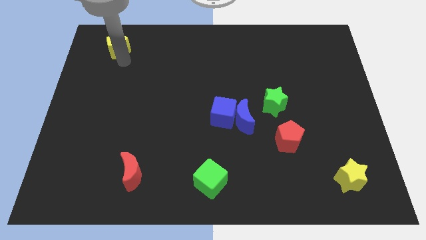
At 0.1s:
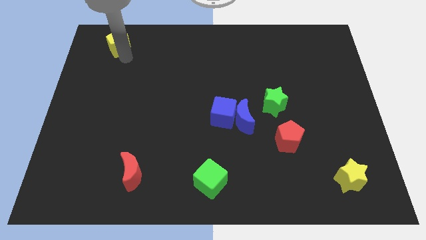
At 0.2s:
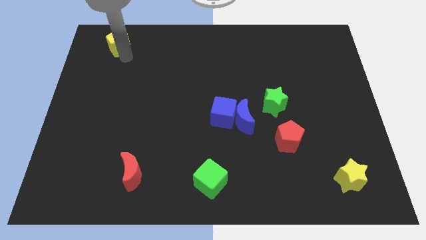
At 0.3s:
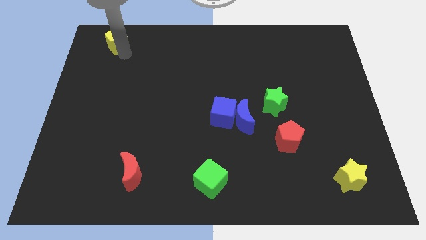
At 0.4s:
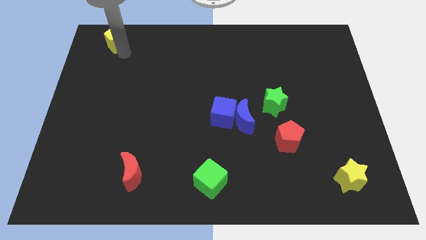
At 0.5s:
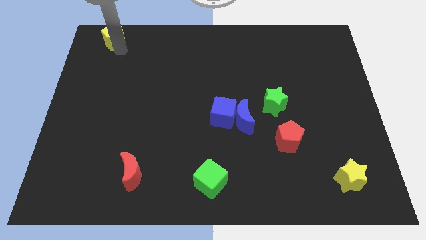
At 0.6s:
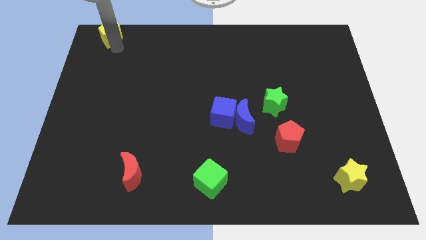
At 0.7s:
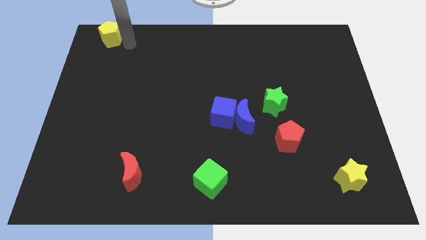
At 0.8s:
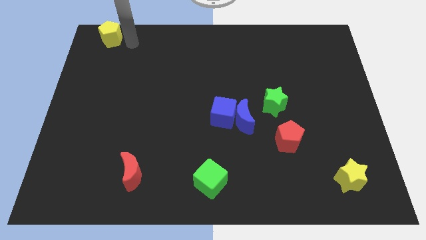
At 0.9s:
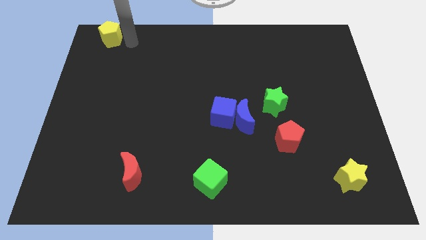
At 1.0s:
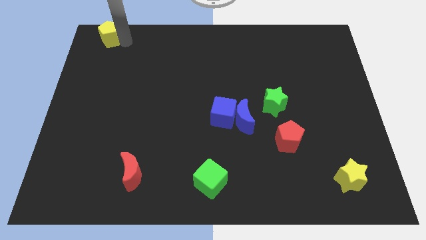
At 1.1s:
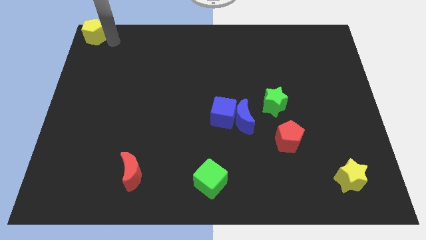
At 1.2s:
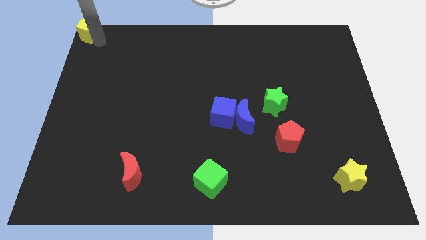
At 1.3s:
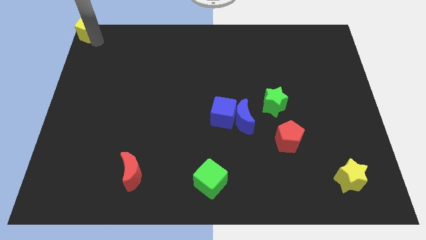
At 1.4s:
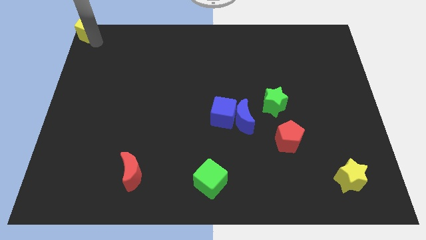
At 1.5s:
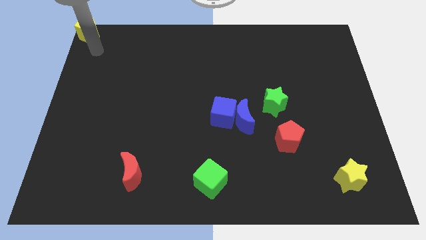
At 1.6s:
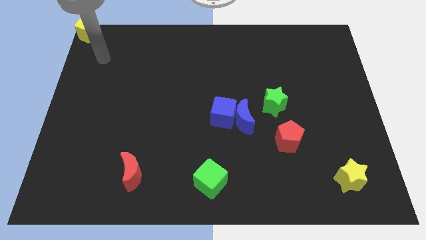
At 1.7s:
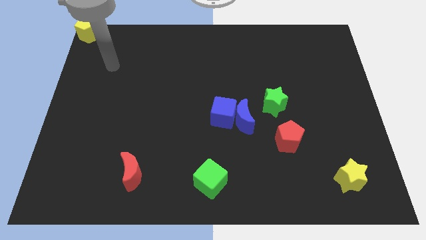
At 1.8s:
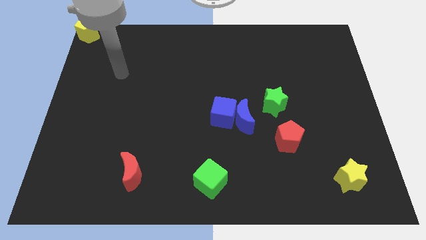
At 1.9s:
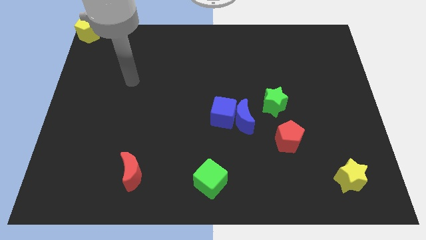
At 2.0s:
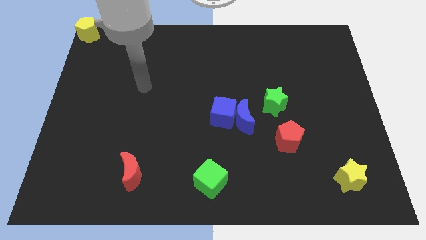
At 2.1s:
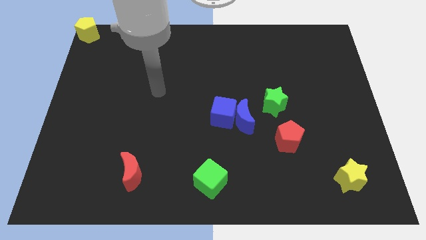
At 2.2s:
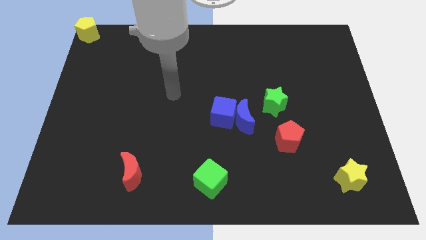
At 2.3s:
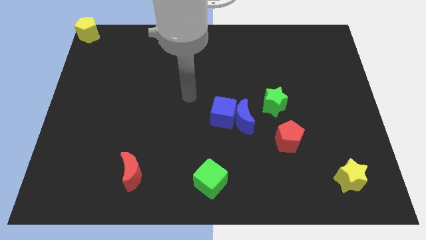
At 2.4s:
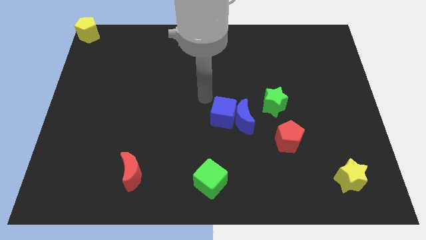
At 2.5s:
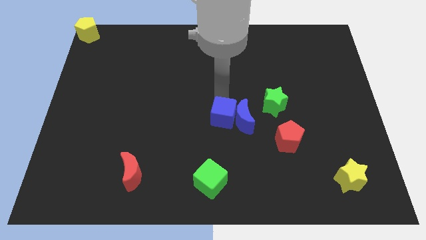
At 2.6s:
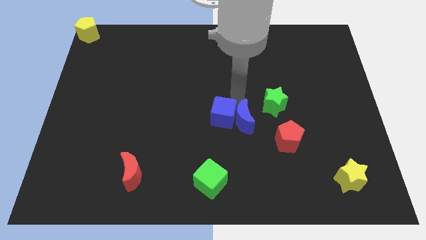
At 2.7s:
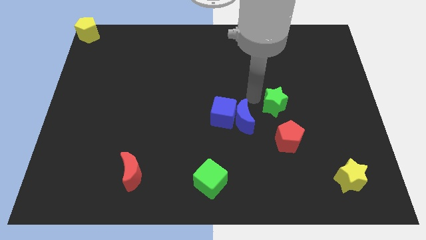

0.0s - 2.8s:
put the yellow pentagon at the top left corner of the board and go away

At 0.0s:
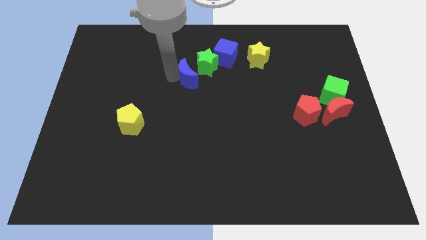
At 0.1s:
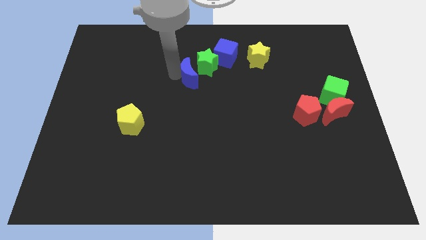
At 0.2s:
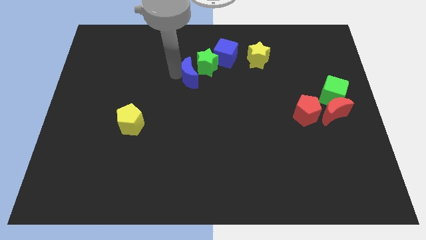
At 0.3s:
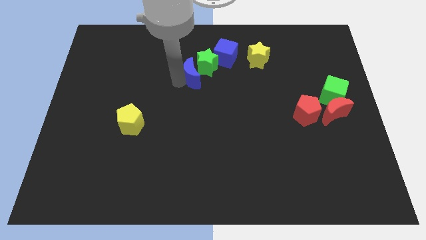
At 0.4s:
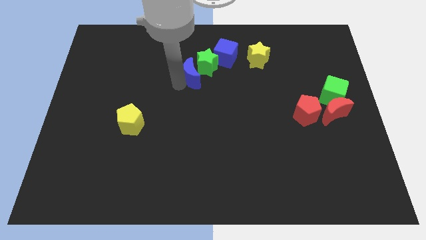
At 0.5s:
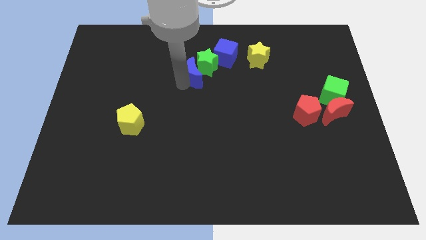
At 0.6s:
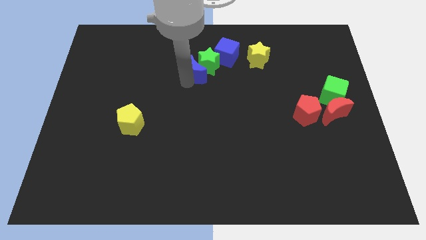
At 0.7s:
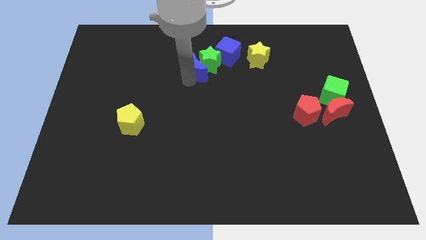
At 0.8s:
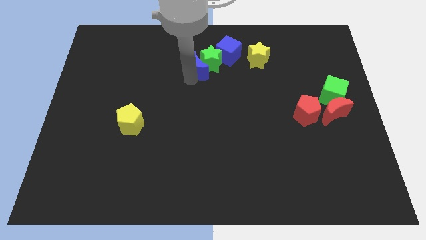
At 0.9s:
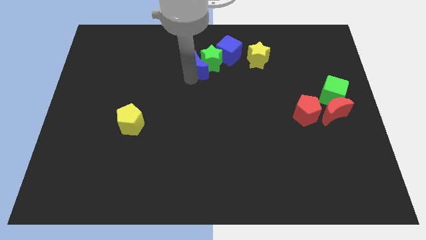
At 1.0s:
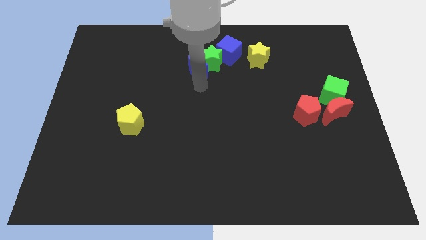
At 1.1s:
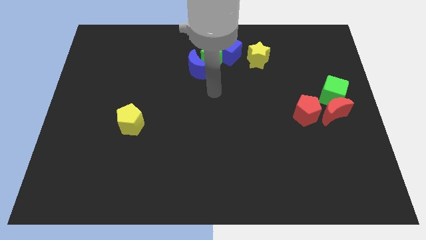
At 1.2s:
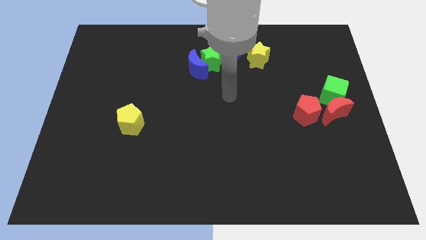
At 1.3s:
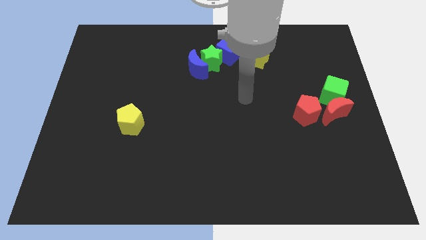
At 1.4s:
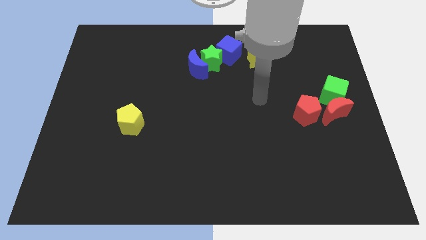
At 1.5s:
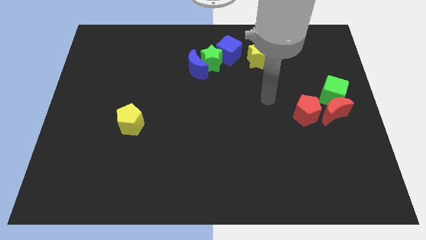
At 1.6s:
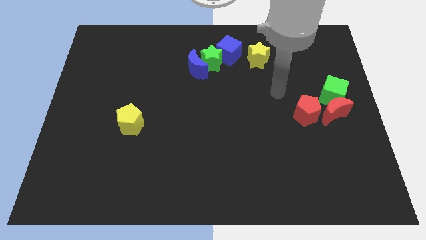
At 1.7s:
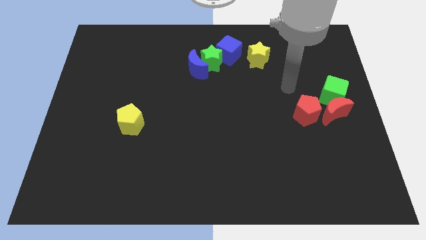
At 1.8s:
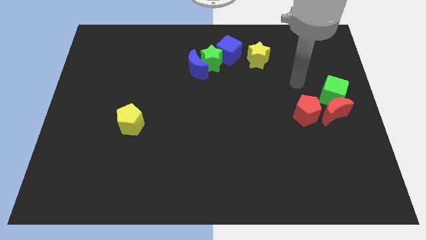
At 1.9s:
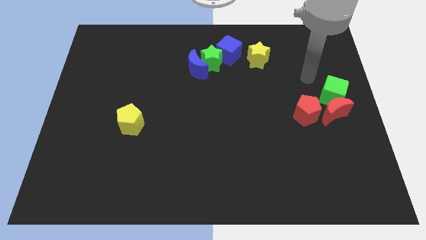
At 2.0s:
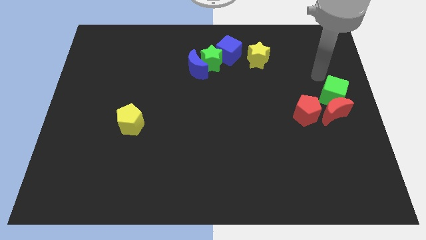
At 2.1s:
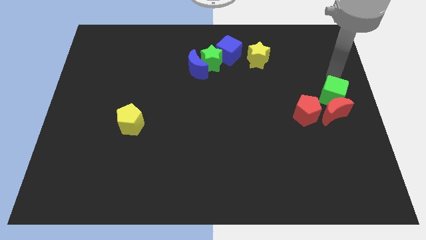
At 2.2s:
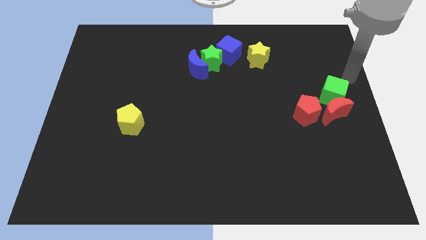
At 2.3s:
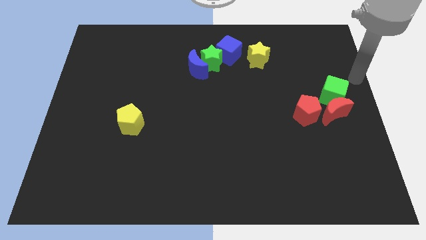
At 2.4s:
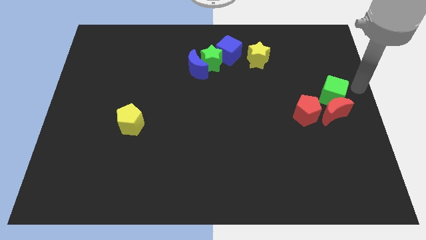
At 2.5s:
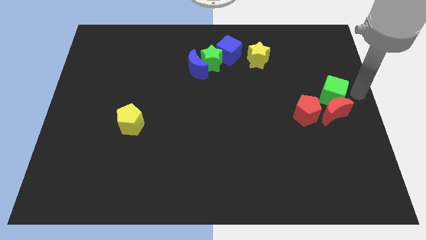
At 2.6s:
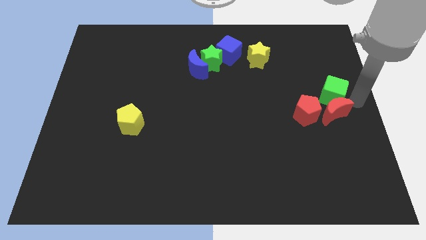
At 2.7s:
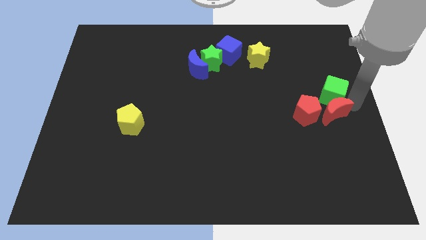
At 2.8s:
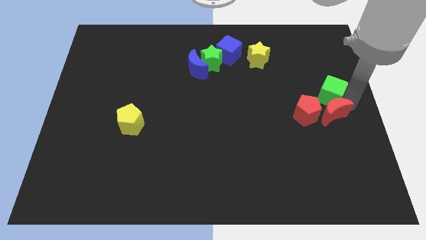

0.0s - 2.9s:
push the group of blocks upward

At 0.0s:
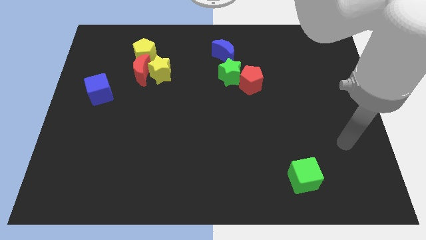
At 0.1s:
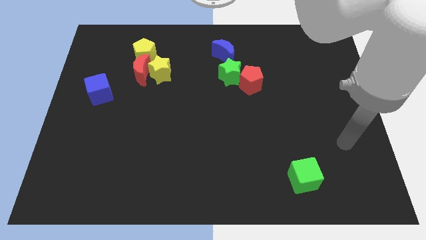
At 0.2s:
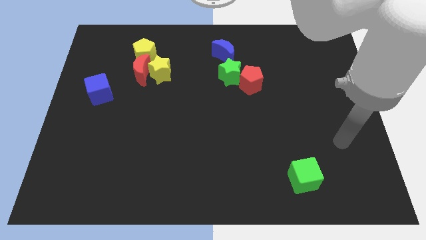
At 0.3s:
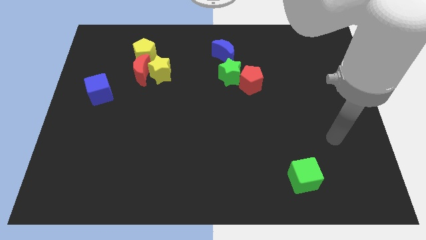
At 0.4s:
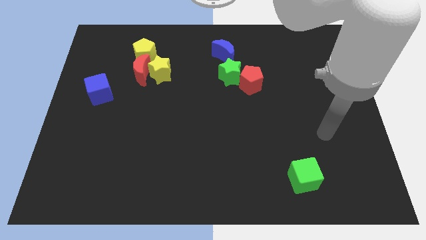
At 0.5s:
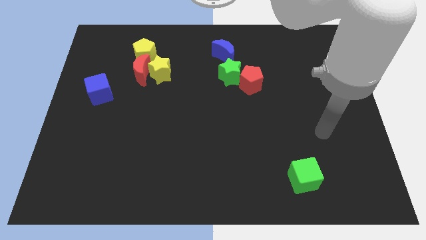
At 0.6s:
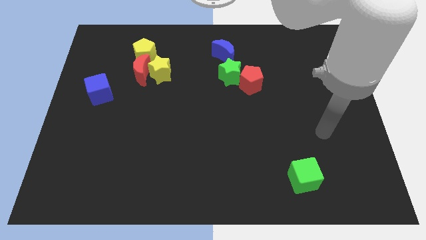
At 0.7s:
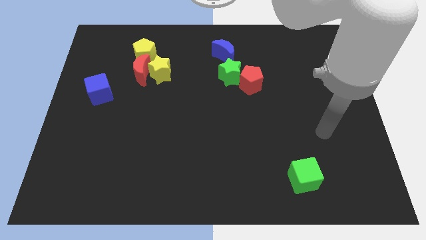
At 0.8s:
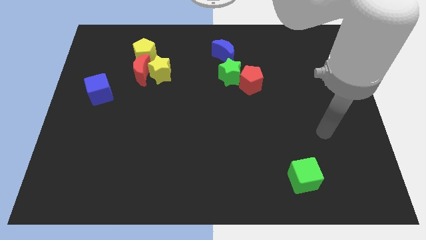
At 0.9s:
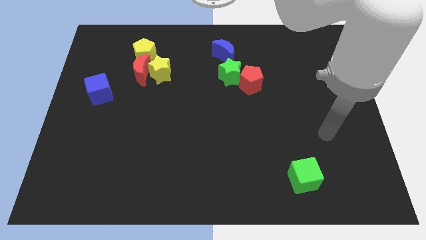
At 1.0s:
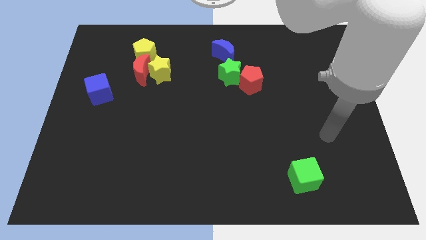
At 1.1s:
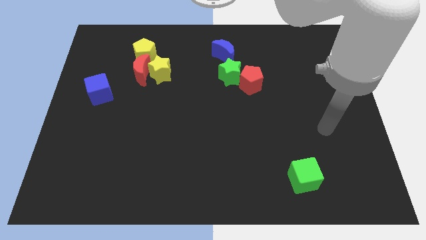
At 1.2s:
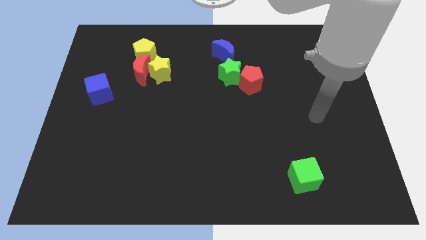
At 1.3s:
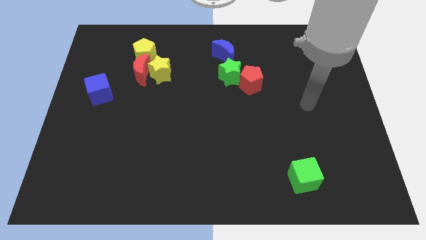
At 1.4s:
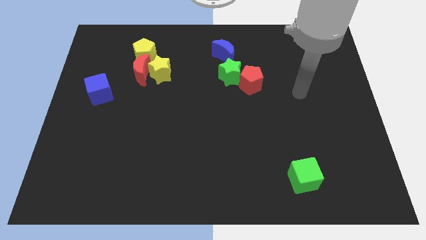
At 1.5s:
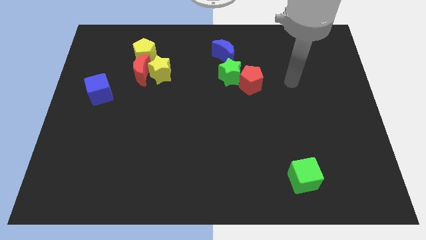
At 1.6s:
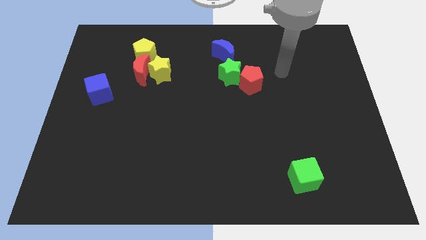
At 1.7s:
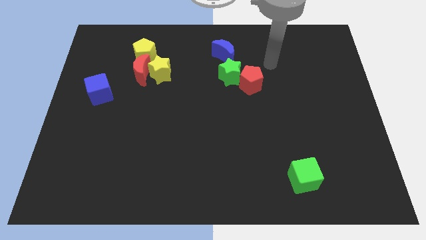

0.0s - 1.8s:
point your hand at the right side of the red pentagon

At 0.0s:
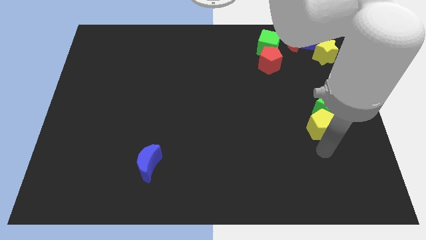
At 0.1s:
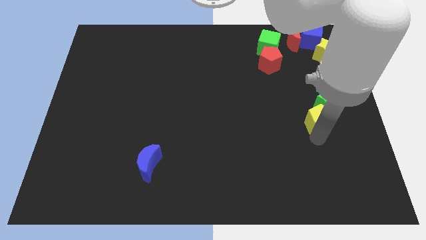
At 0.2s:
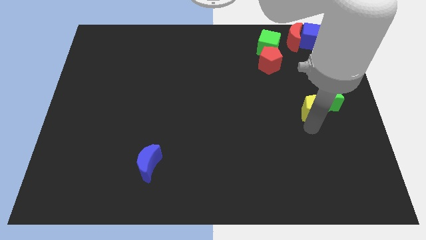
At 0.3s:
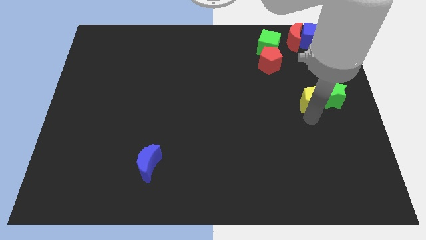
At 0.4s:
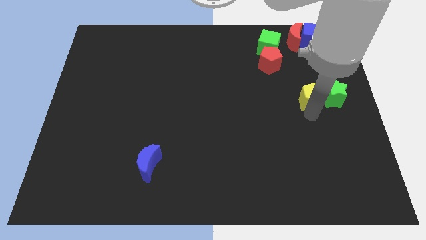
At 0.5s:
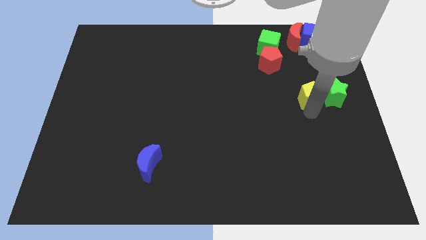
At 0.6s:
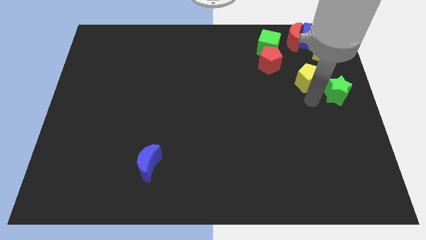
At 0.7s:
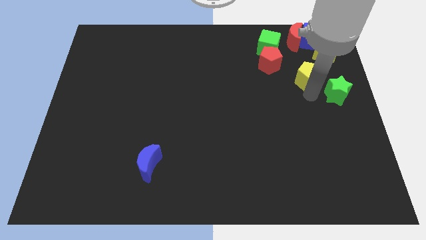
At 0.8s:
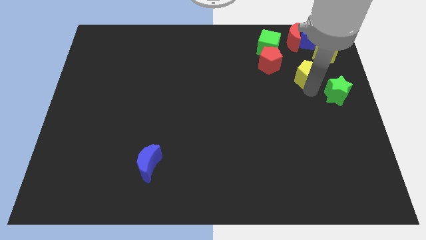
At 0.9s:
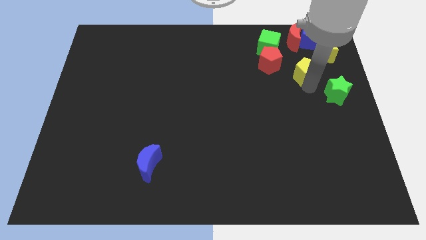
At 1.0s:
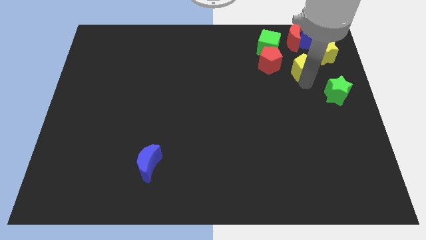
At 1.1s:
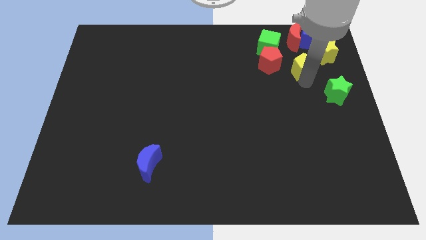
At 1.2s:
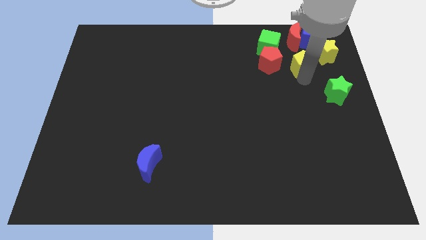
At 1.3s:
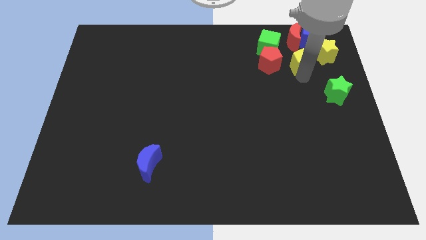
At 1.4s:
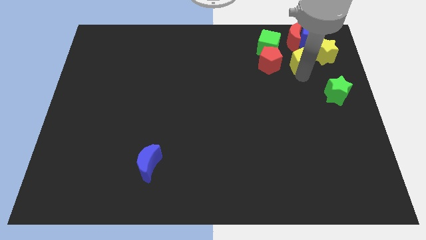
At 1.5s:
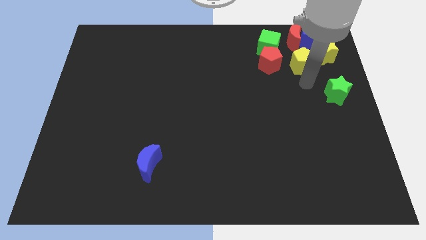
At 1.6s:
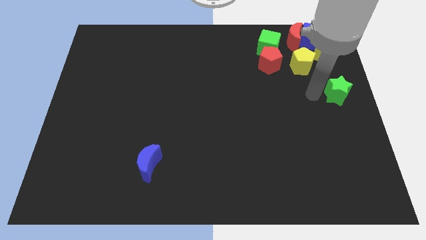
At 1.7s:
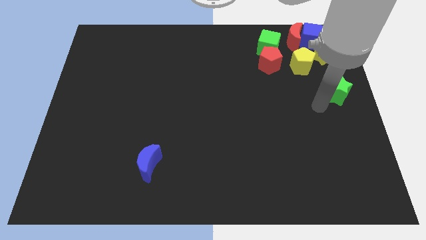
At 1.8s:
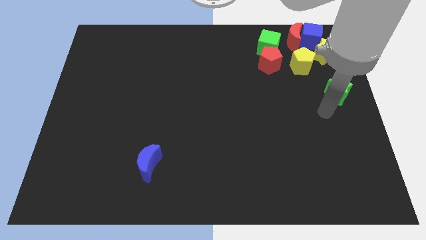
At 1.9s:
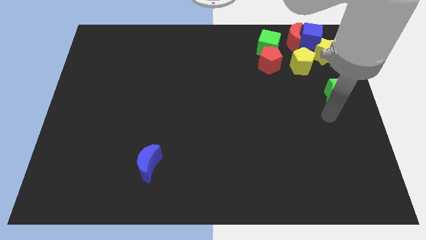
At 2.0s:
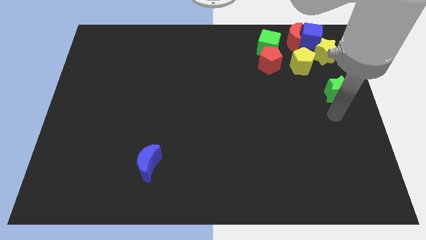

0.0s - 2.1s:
add yellow pentagon to the red moonblue cube and yellow star
